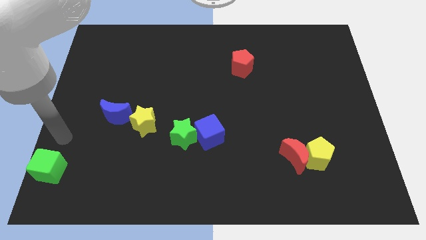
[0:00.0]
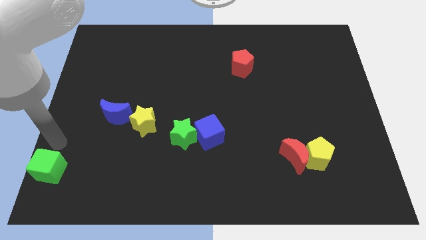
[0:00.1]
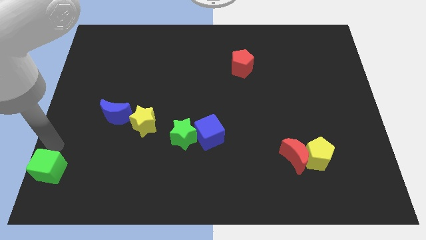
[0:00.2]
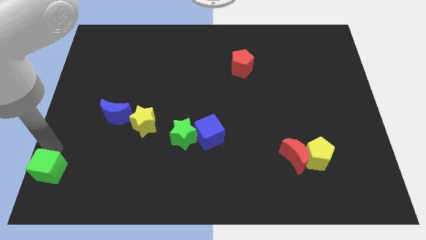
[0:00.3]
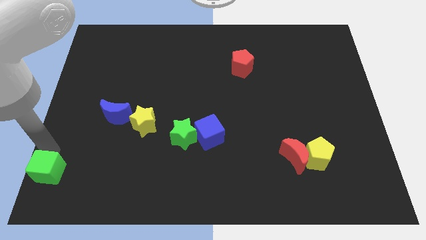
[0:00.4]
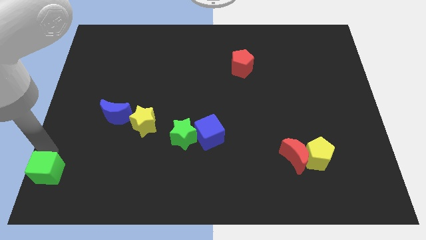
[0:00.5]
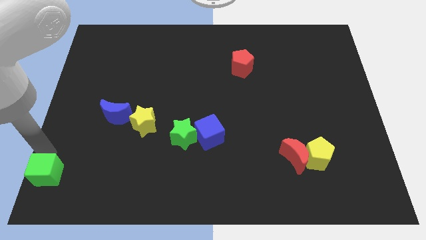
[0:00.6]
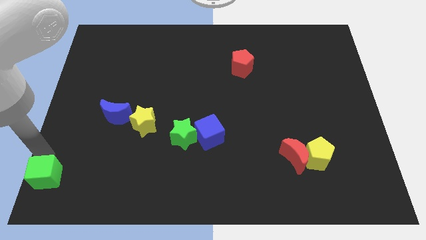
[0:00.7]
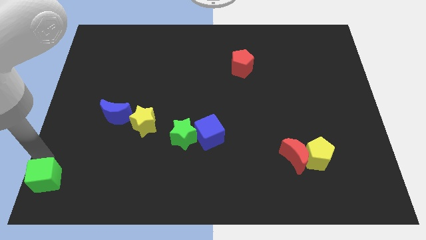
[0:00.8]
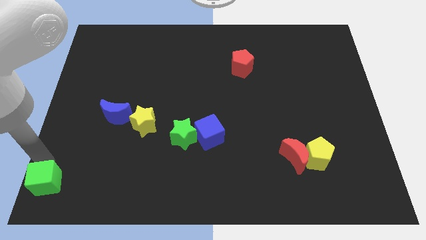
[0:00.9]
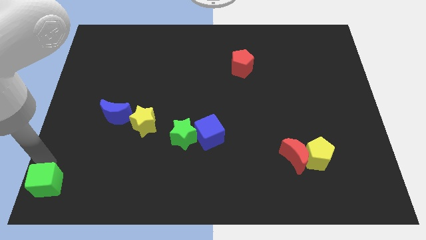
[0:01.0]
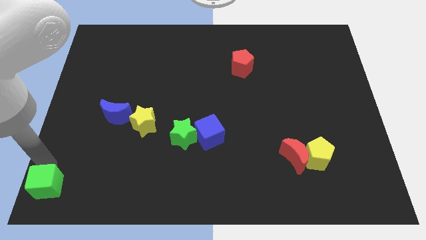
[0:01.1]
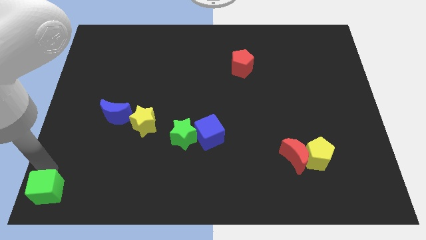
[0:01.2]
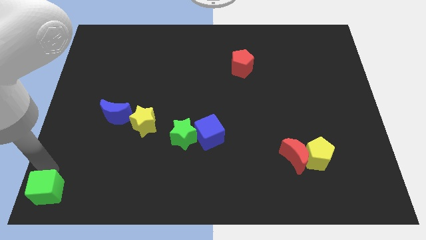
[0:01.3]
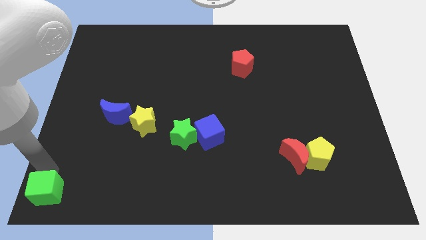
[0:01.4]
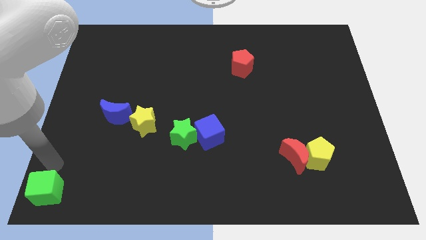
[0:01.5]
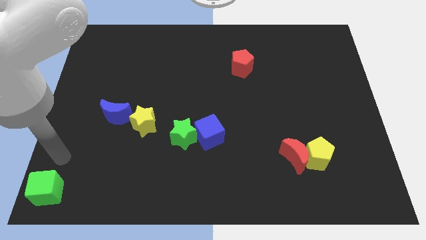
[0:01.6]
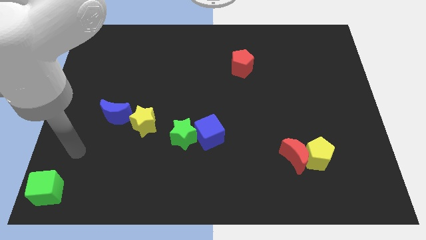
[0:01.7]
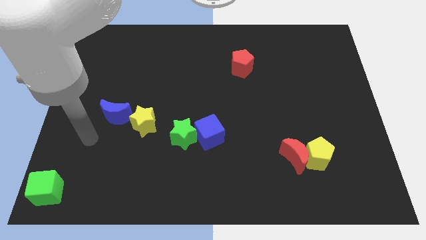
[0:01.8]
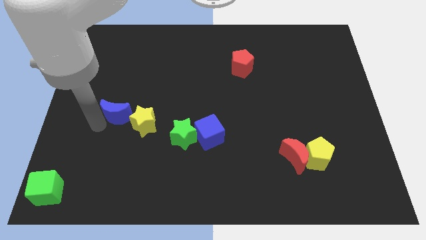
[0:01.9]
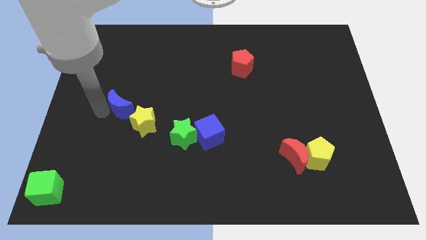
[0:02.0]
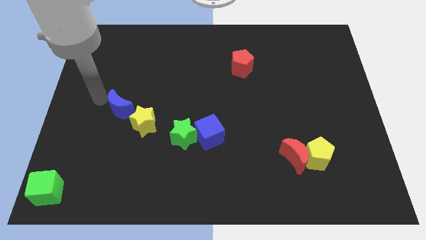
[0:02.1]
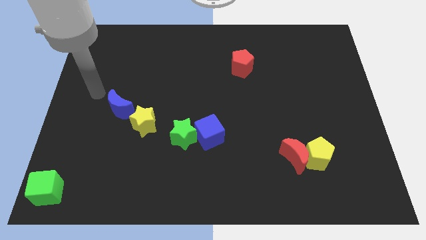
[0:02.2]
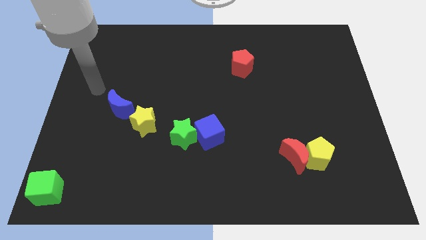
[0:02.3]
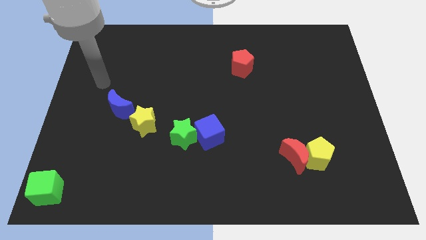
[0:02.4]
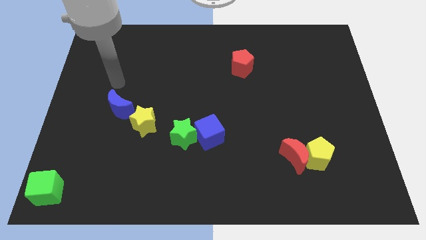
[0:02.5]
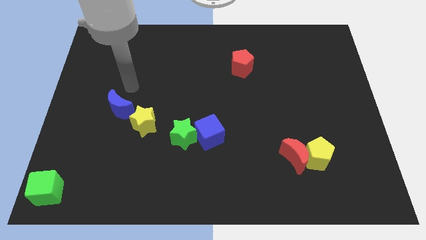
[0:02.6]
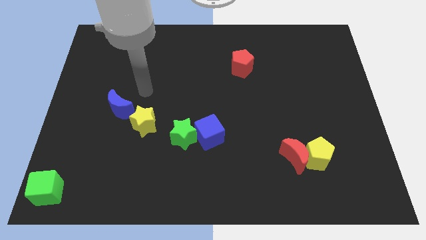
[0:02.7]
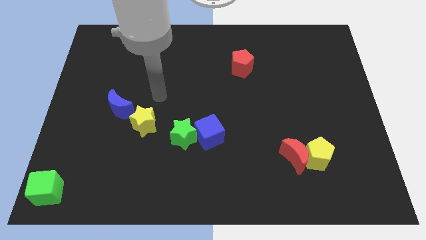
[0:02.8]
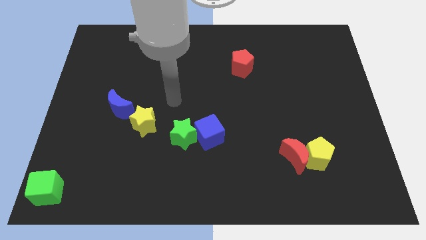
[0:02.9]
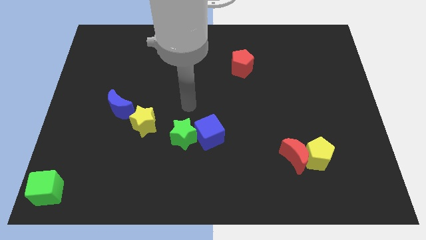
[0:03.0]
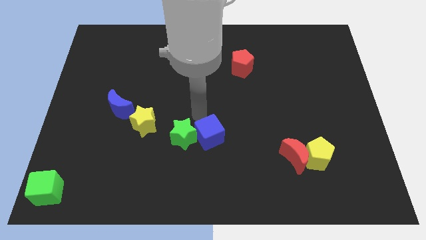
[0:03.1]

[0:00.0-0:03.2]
put the green cube at the bottom left corner

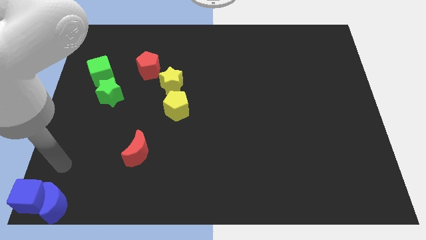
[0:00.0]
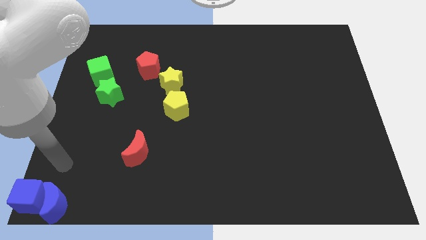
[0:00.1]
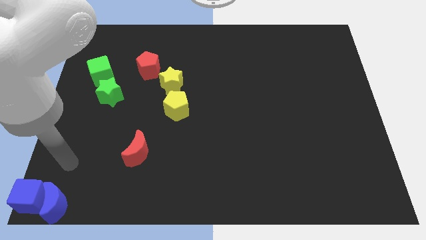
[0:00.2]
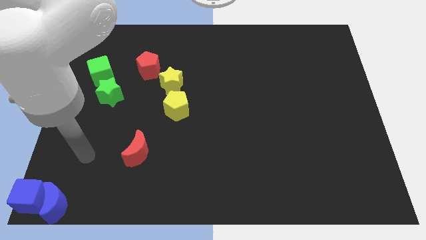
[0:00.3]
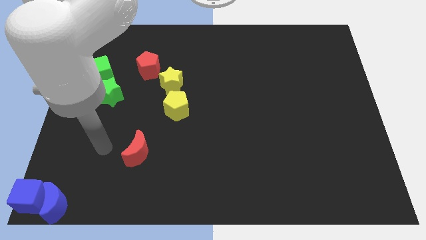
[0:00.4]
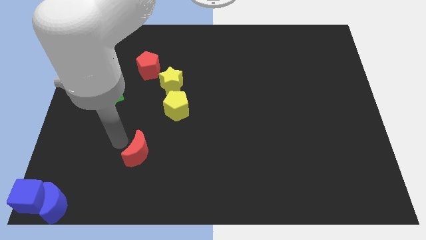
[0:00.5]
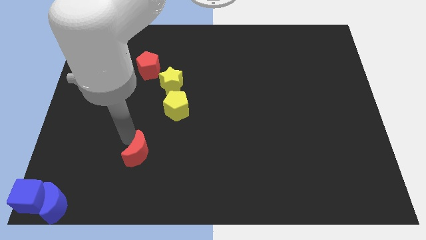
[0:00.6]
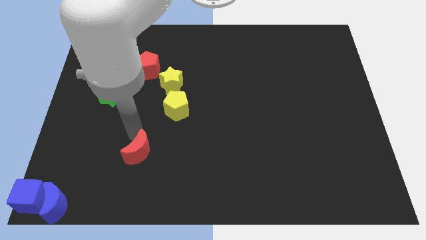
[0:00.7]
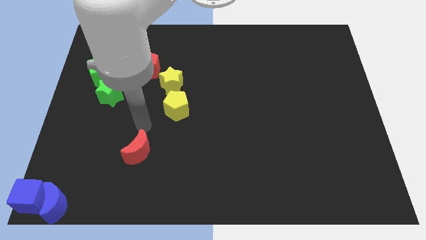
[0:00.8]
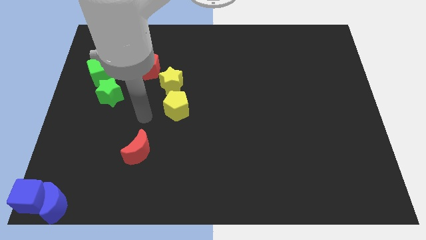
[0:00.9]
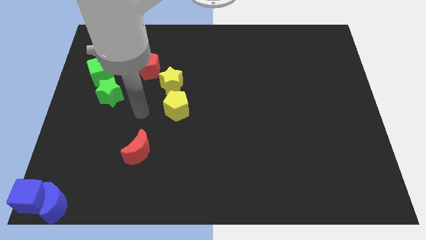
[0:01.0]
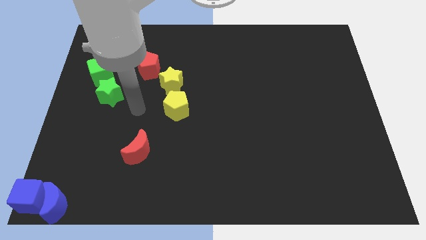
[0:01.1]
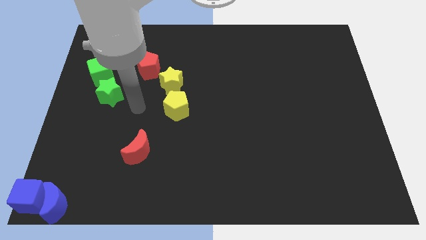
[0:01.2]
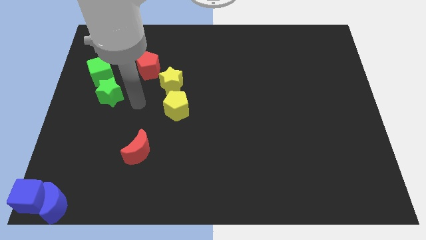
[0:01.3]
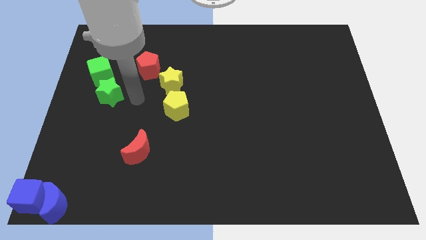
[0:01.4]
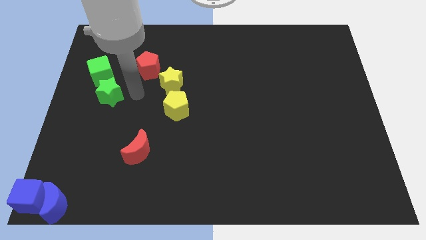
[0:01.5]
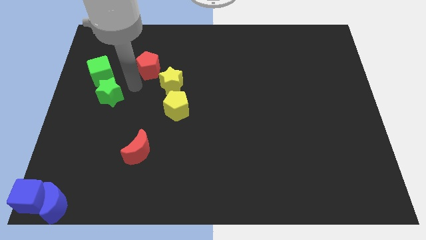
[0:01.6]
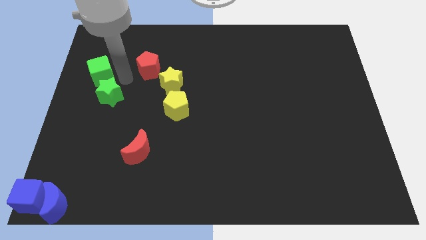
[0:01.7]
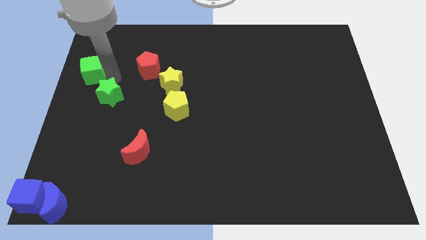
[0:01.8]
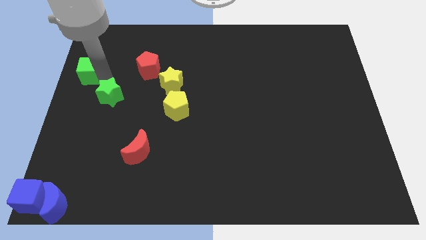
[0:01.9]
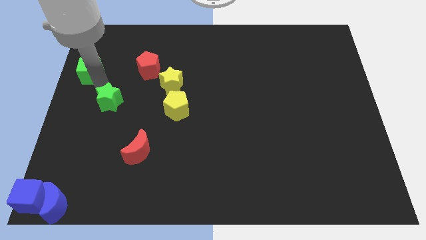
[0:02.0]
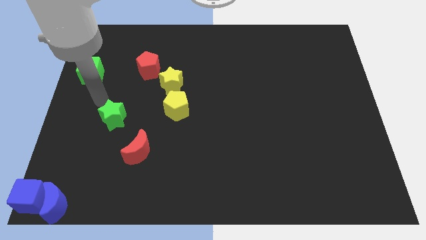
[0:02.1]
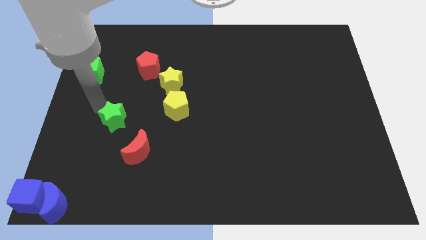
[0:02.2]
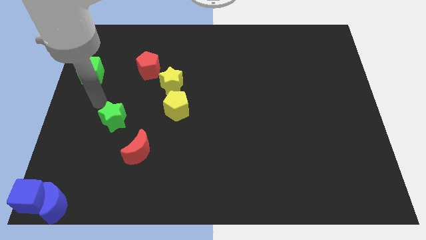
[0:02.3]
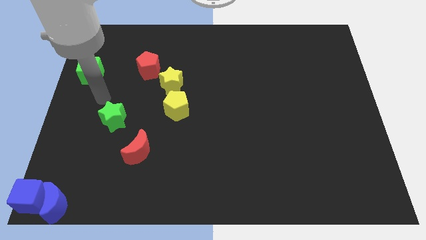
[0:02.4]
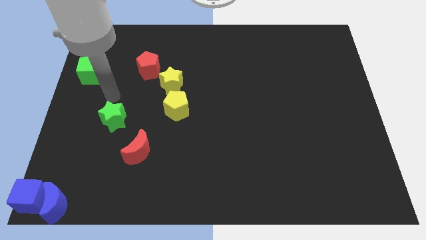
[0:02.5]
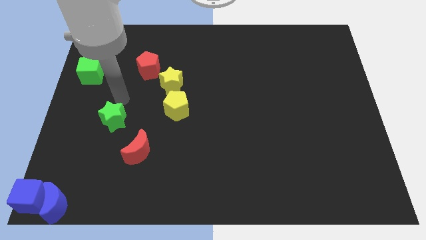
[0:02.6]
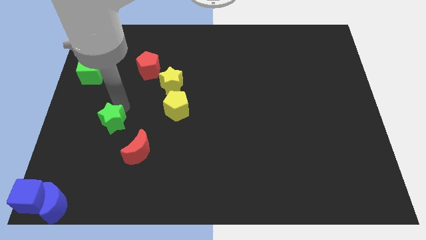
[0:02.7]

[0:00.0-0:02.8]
separate green star away from green cube

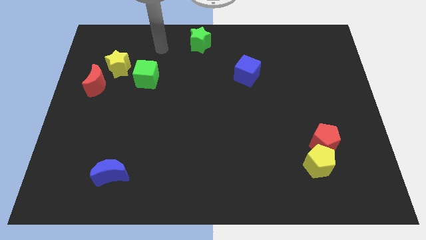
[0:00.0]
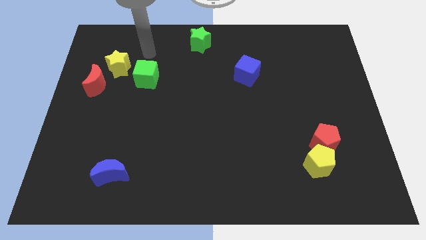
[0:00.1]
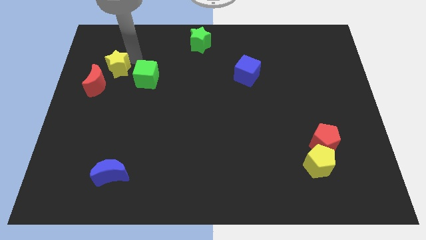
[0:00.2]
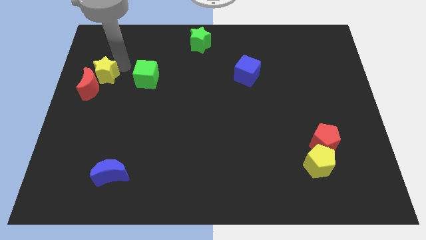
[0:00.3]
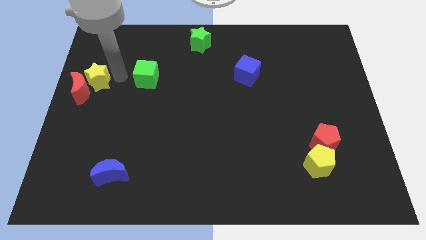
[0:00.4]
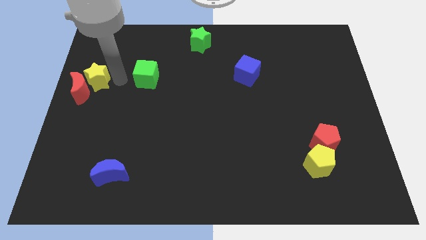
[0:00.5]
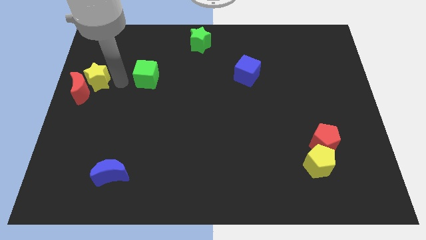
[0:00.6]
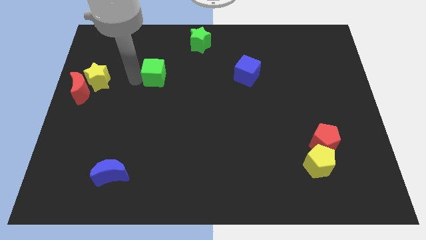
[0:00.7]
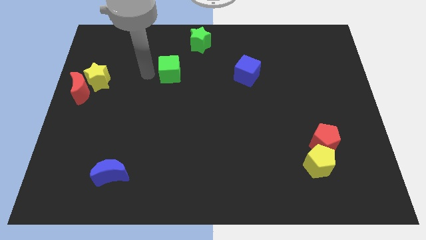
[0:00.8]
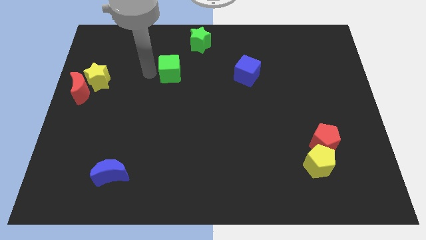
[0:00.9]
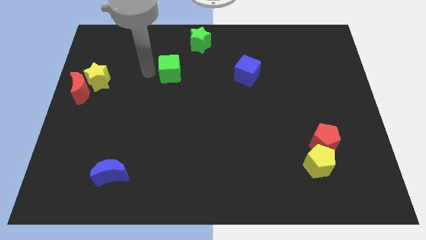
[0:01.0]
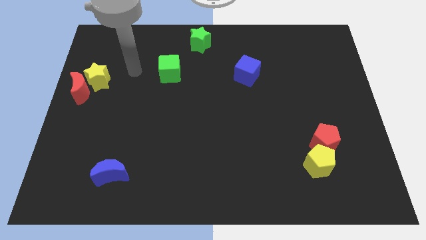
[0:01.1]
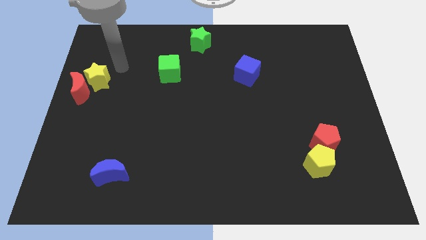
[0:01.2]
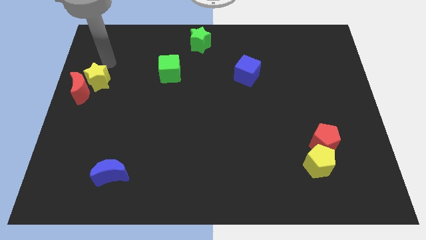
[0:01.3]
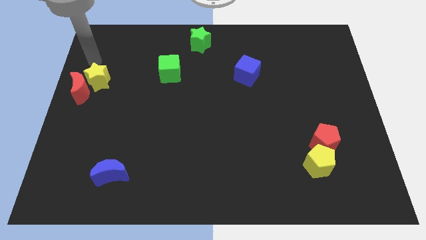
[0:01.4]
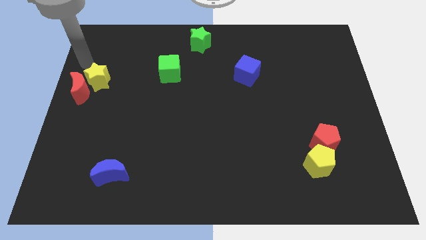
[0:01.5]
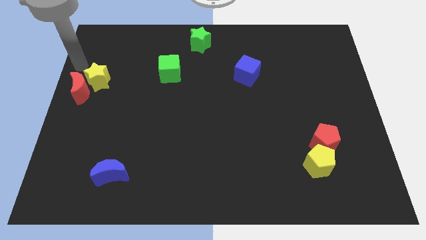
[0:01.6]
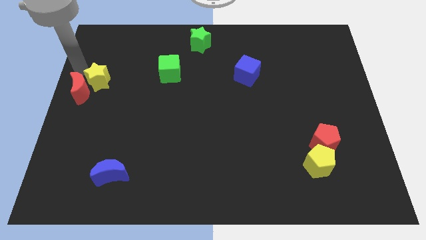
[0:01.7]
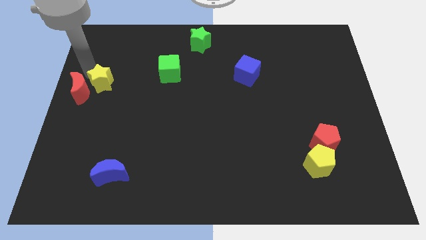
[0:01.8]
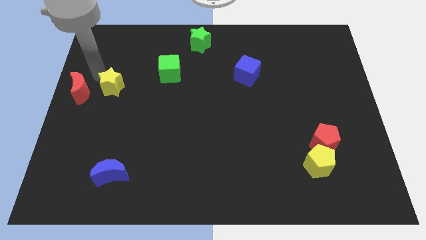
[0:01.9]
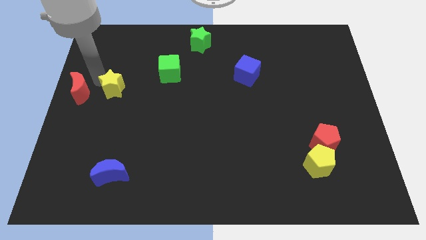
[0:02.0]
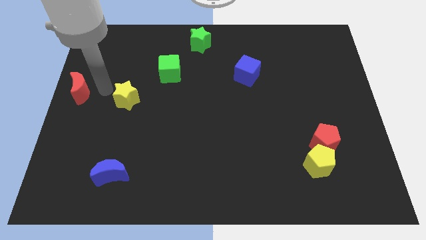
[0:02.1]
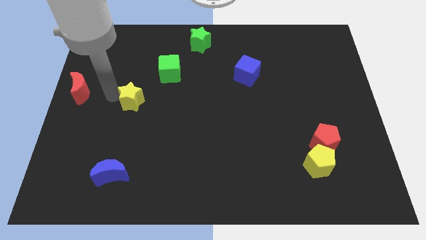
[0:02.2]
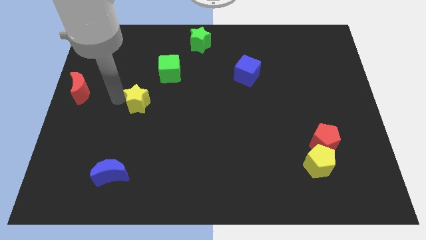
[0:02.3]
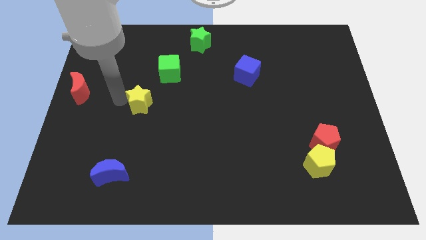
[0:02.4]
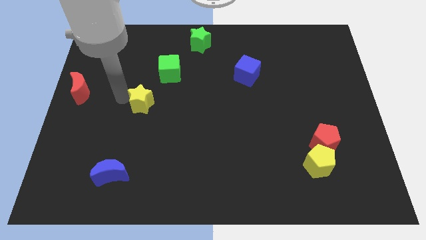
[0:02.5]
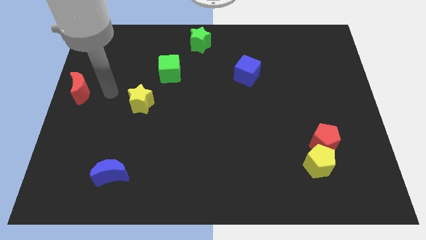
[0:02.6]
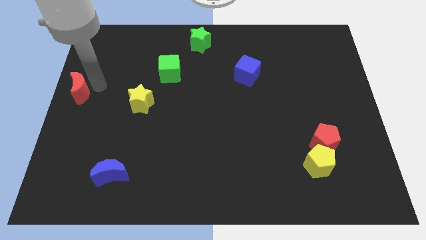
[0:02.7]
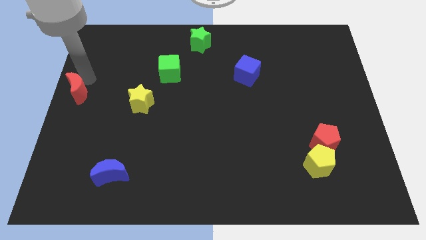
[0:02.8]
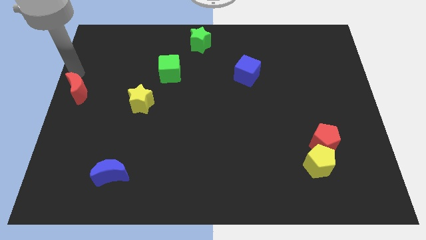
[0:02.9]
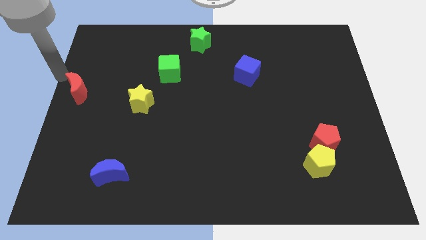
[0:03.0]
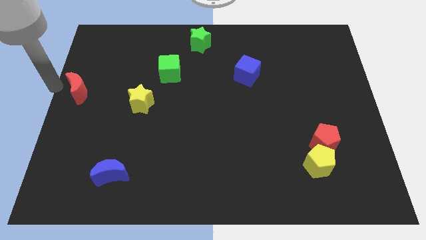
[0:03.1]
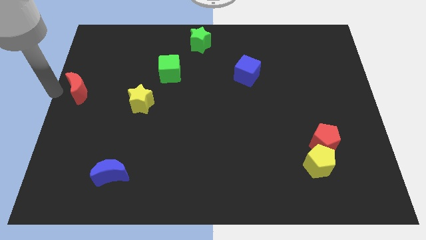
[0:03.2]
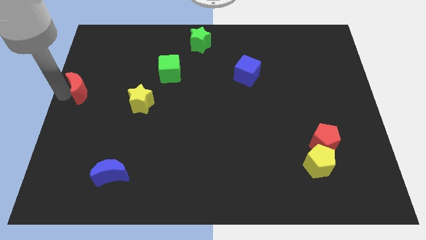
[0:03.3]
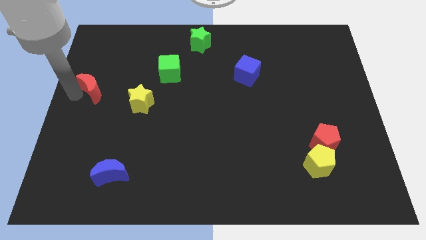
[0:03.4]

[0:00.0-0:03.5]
move the yellow star parallel to the green cube
